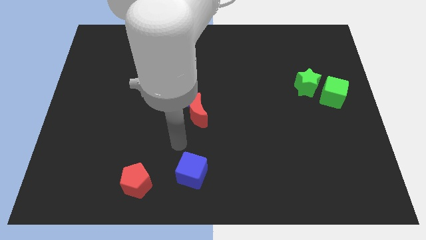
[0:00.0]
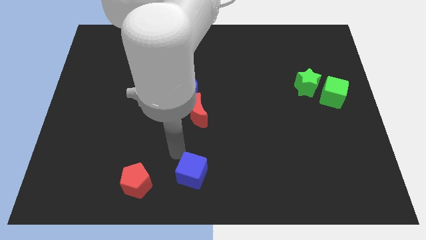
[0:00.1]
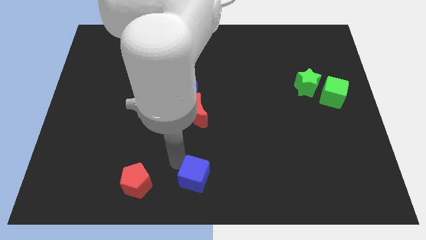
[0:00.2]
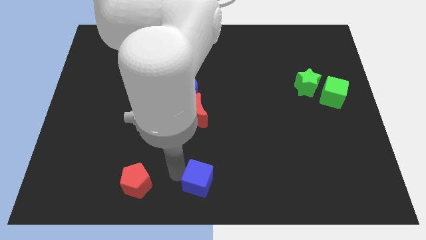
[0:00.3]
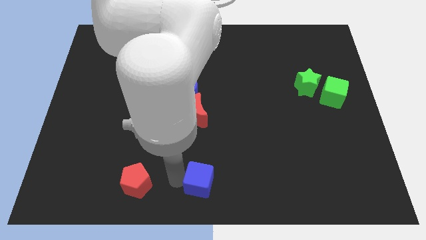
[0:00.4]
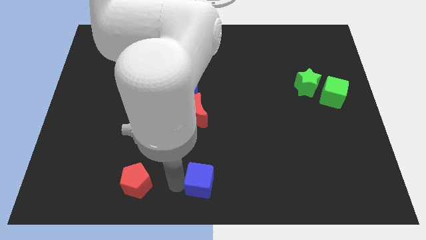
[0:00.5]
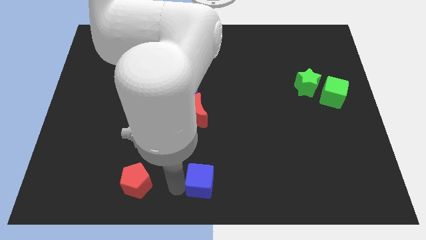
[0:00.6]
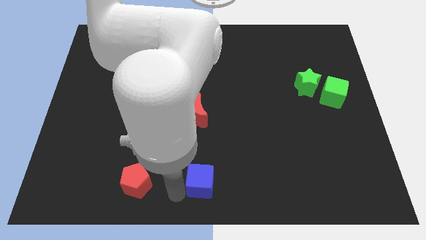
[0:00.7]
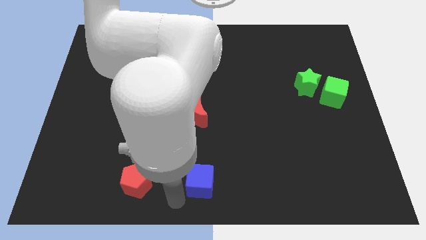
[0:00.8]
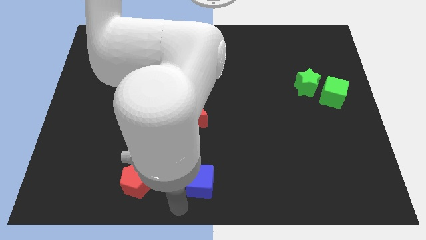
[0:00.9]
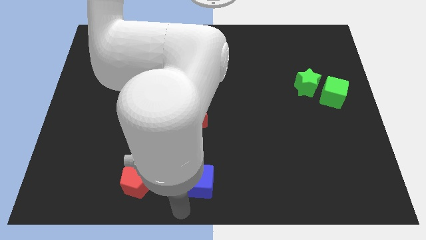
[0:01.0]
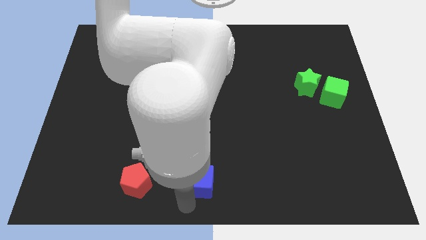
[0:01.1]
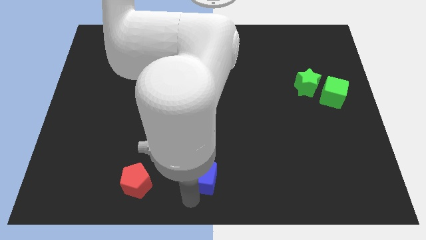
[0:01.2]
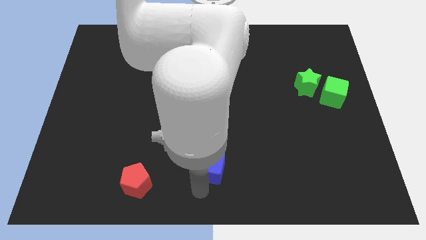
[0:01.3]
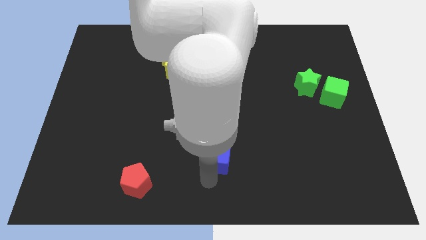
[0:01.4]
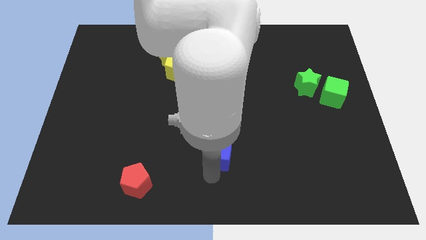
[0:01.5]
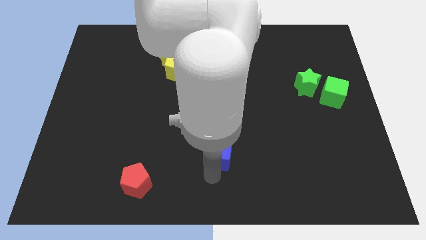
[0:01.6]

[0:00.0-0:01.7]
drag the blue cube slightly to the top side of the board

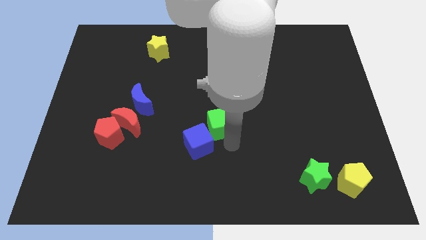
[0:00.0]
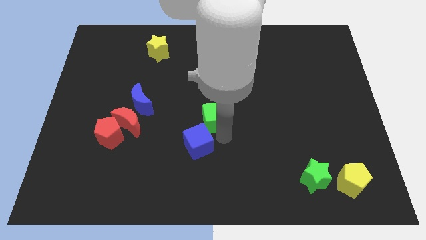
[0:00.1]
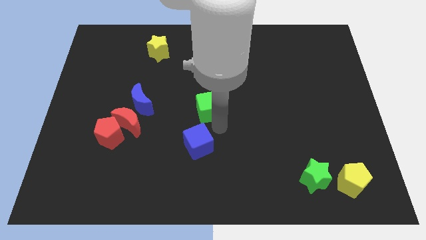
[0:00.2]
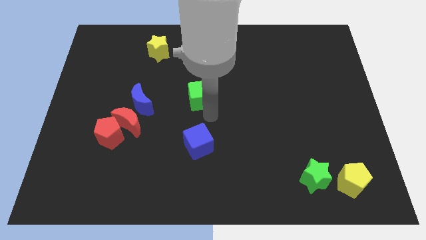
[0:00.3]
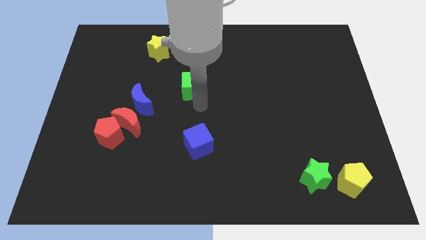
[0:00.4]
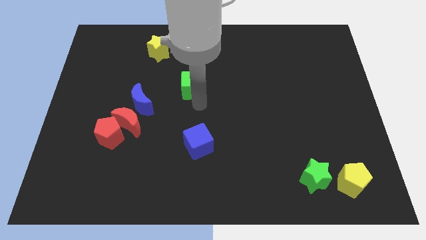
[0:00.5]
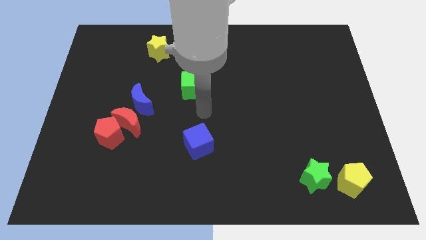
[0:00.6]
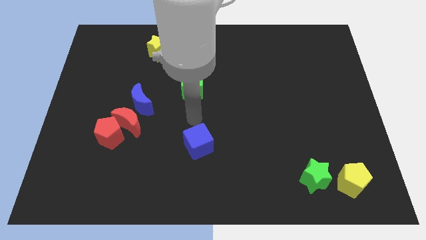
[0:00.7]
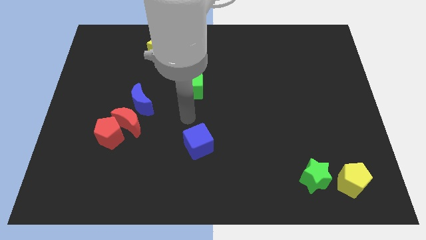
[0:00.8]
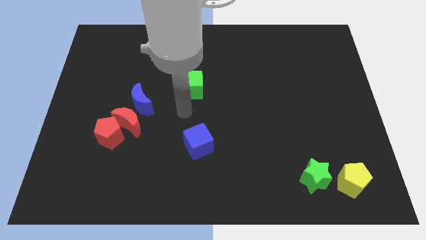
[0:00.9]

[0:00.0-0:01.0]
put green cube vertically above blue cube

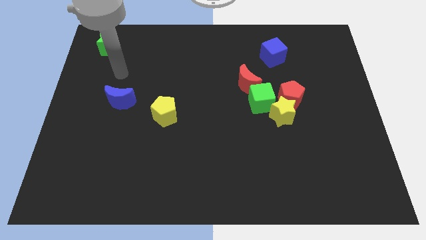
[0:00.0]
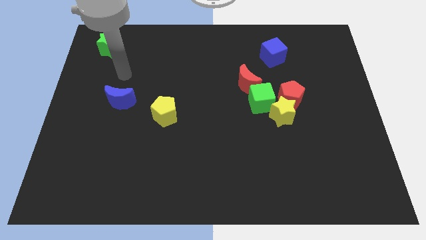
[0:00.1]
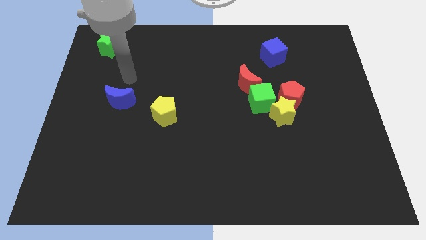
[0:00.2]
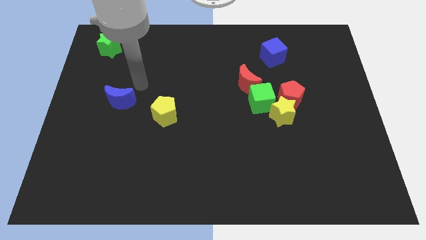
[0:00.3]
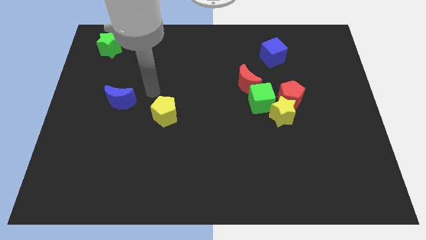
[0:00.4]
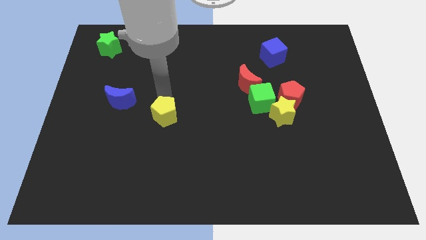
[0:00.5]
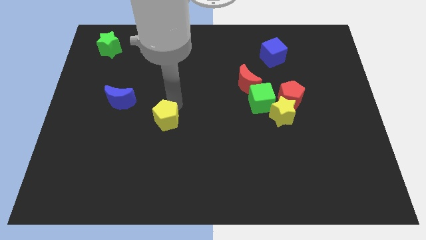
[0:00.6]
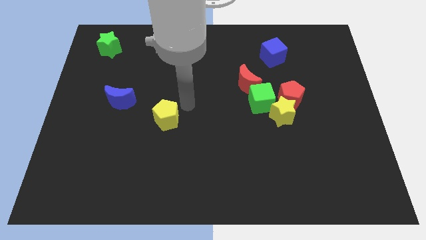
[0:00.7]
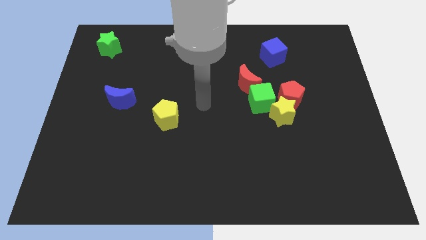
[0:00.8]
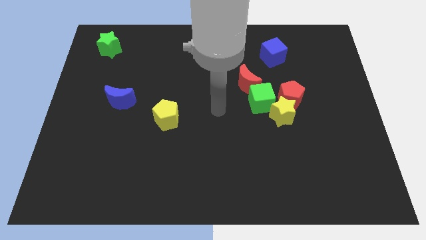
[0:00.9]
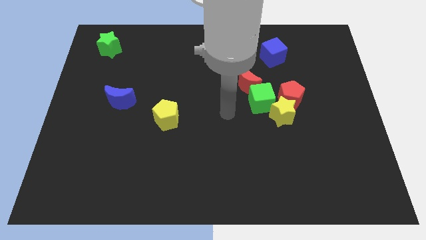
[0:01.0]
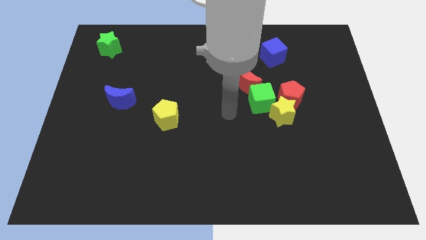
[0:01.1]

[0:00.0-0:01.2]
slightly tap on the yellow pentagon

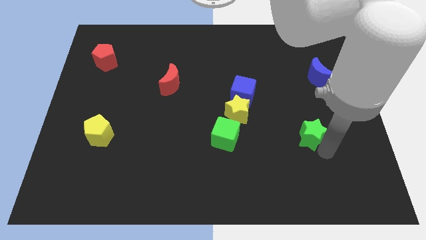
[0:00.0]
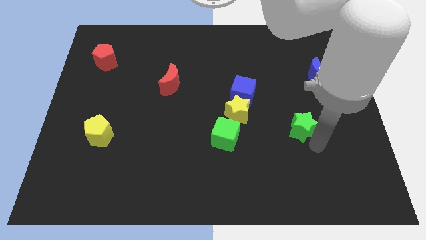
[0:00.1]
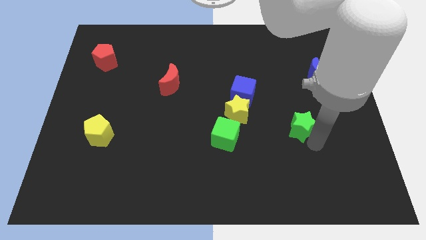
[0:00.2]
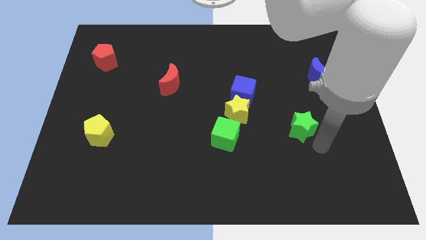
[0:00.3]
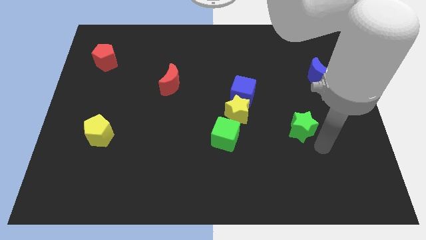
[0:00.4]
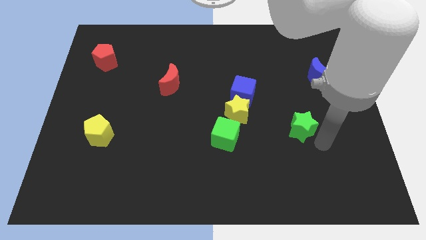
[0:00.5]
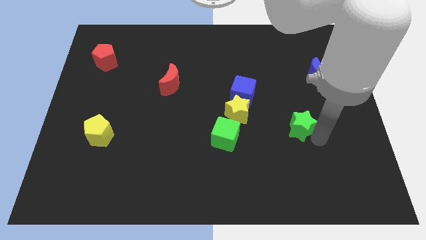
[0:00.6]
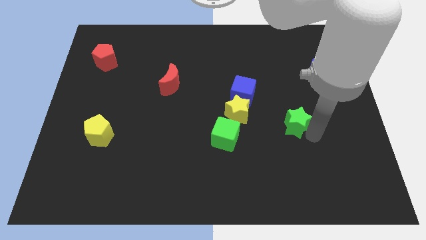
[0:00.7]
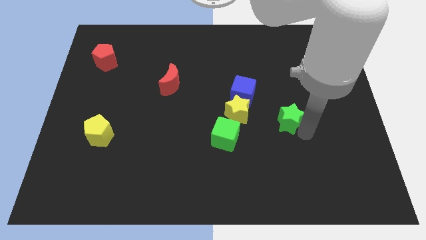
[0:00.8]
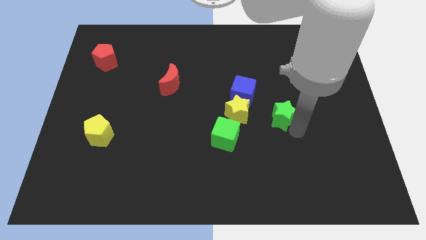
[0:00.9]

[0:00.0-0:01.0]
put the green star diagonally at the bottom right of the blue moon

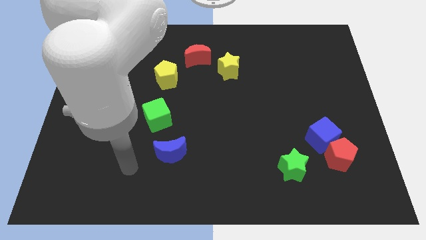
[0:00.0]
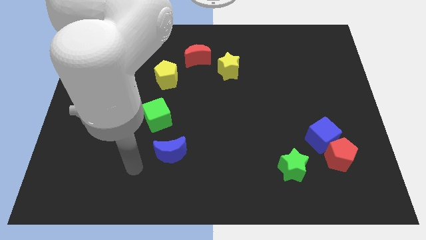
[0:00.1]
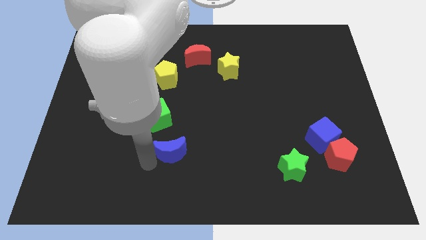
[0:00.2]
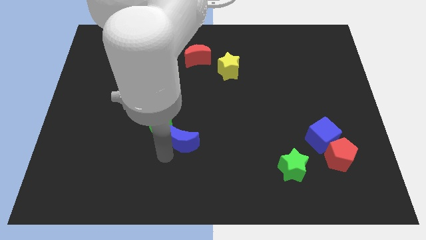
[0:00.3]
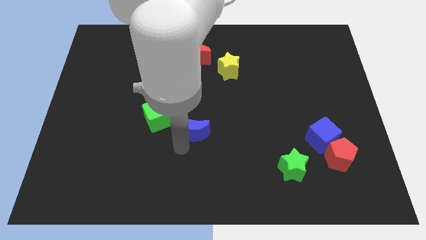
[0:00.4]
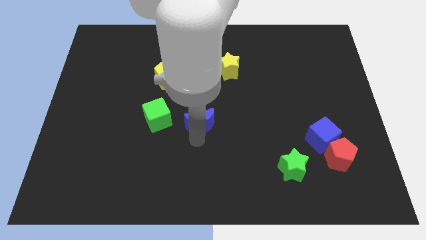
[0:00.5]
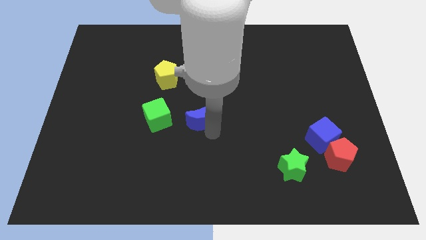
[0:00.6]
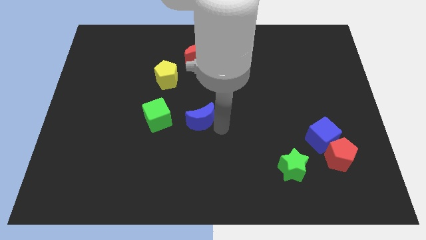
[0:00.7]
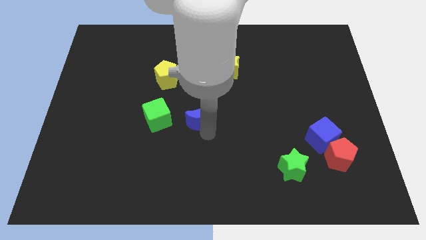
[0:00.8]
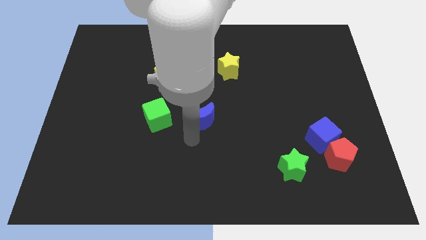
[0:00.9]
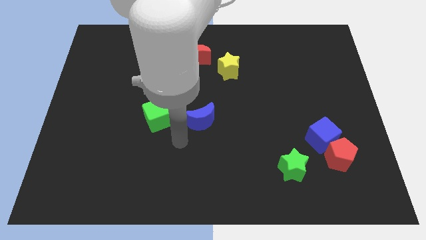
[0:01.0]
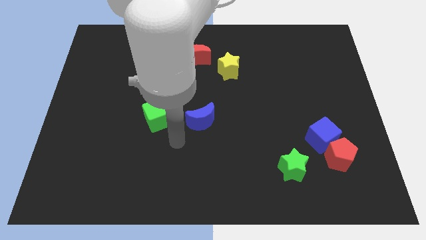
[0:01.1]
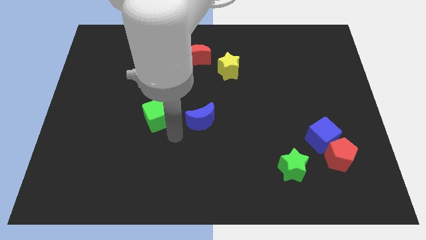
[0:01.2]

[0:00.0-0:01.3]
place the blue crescent horizontally to the right side of the green cube

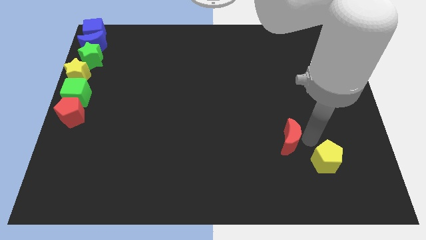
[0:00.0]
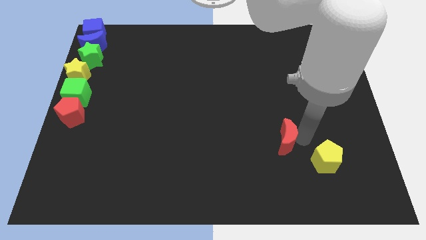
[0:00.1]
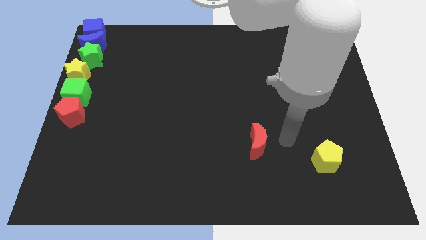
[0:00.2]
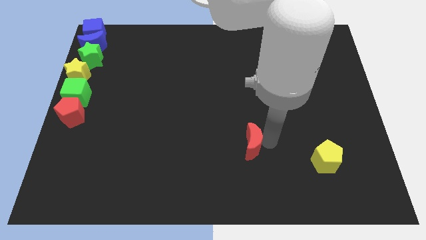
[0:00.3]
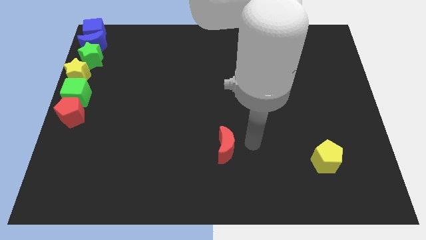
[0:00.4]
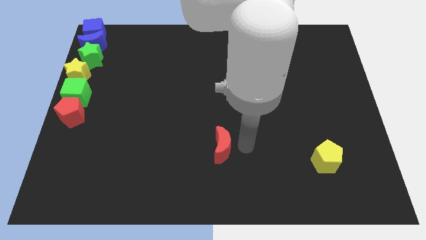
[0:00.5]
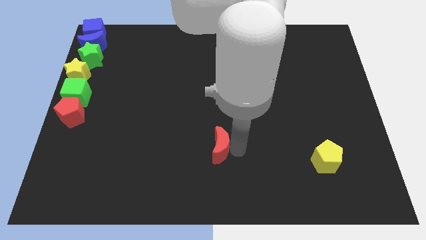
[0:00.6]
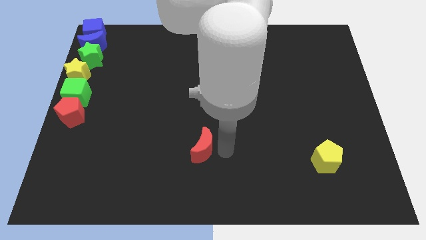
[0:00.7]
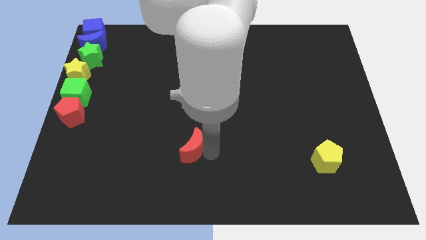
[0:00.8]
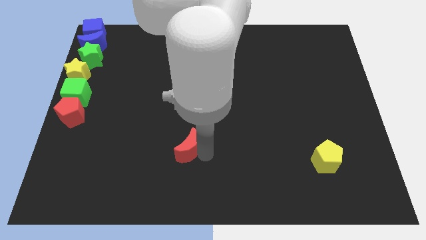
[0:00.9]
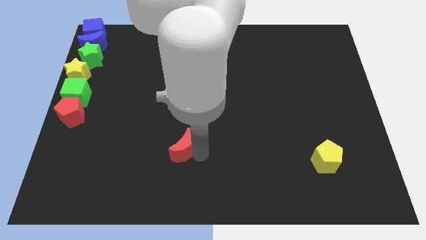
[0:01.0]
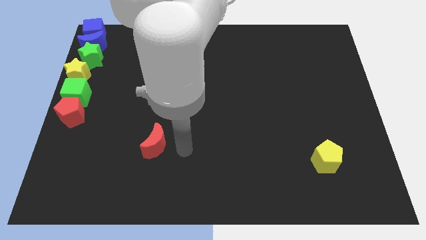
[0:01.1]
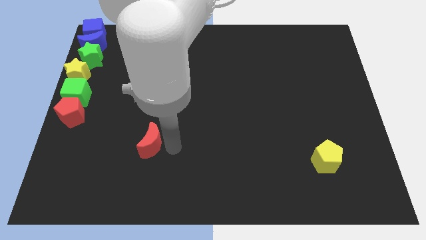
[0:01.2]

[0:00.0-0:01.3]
push the red moon towards the left side of the board

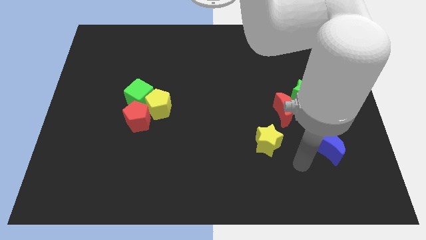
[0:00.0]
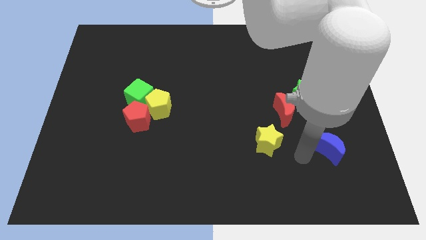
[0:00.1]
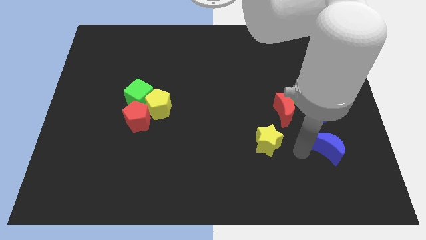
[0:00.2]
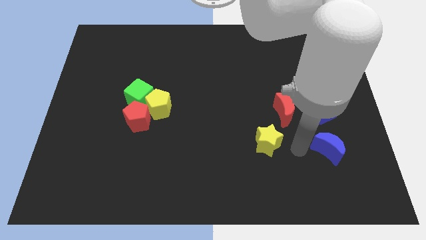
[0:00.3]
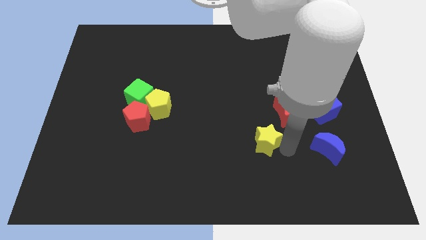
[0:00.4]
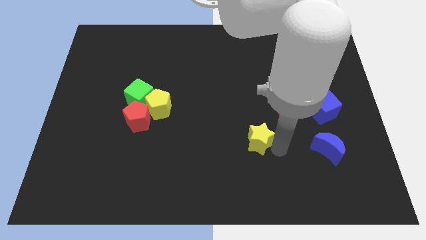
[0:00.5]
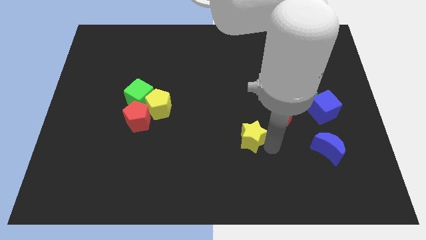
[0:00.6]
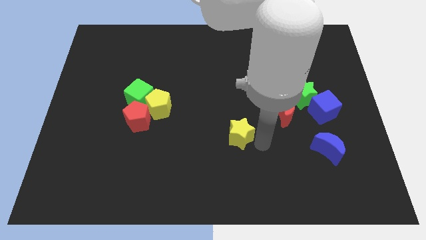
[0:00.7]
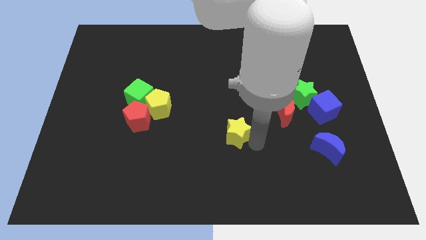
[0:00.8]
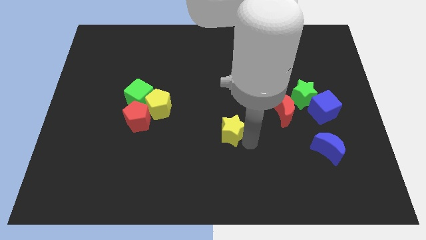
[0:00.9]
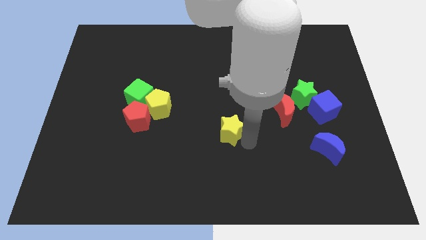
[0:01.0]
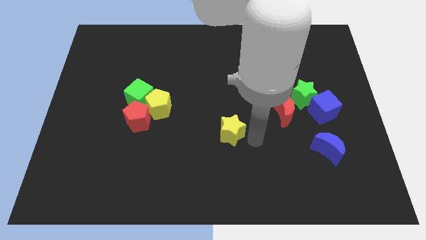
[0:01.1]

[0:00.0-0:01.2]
move the yellow star slightly to the left of the board
